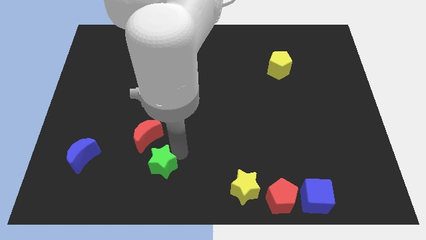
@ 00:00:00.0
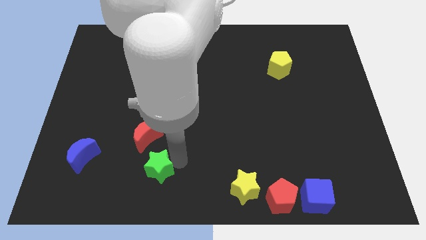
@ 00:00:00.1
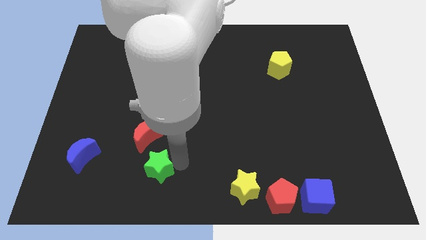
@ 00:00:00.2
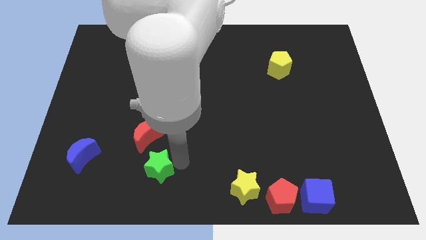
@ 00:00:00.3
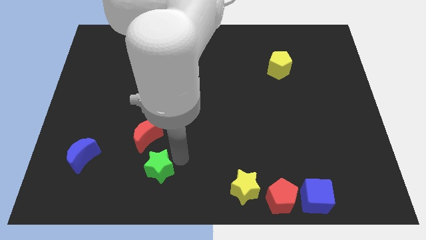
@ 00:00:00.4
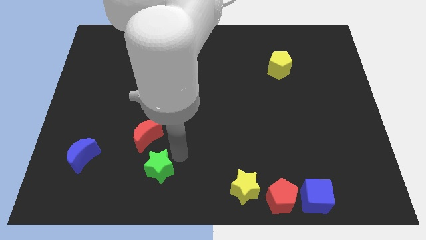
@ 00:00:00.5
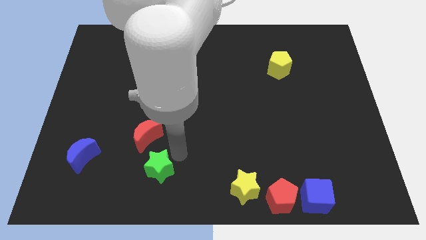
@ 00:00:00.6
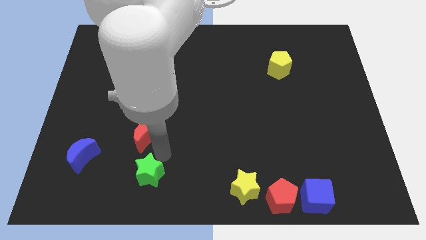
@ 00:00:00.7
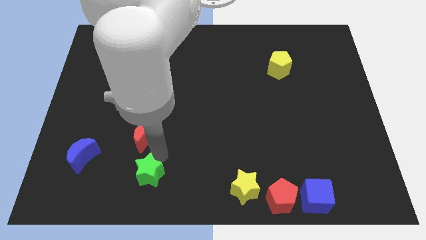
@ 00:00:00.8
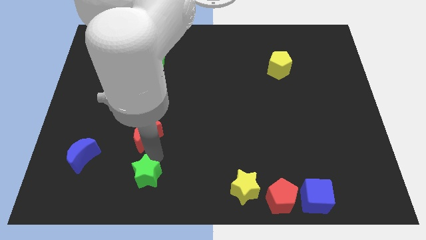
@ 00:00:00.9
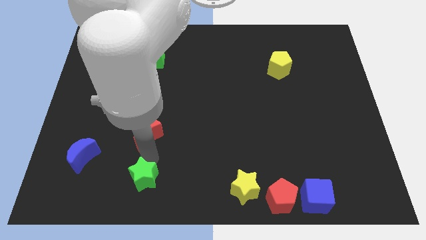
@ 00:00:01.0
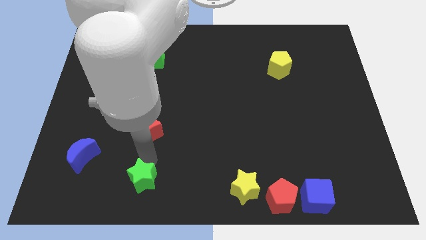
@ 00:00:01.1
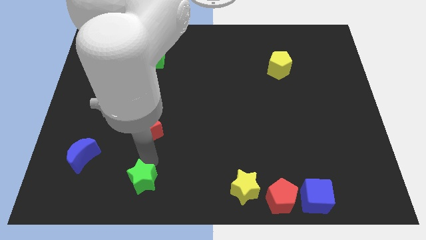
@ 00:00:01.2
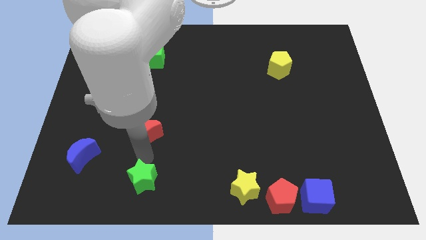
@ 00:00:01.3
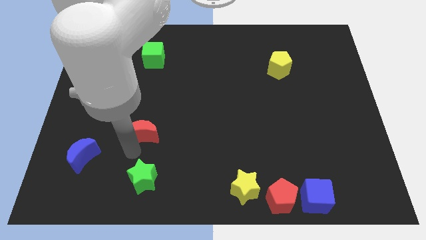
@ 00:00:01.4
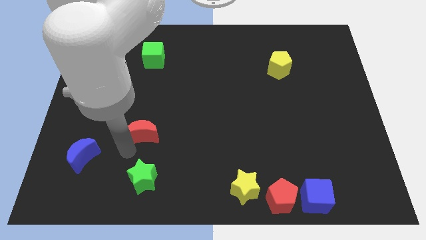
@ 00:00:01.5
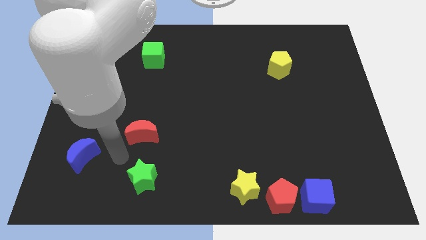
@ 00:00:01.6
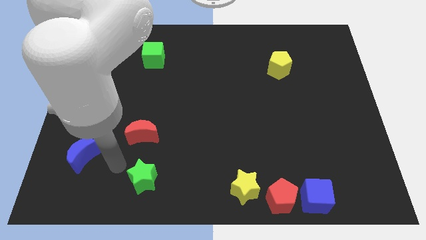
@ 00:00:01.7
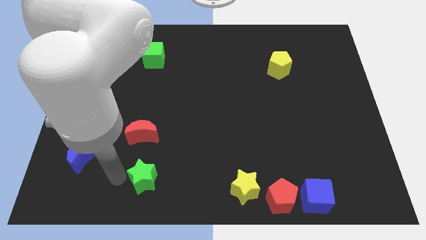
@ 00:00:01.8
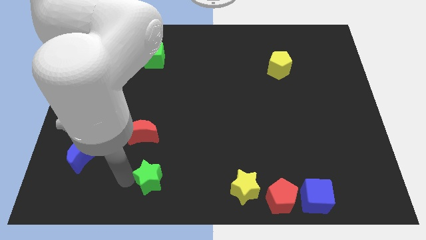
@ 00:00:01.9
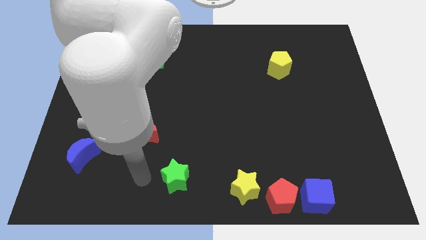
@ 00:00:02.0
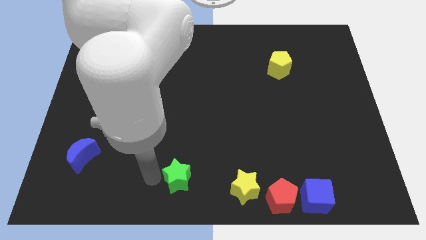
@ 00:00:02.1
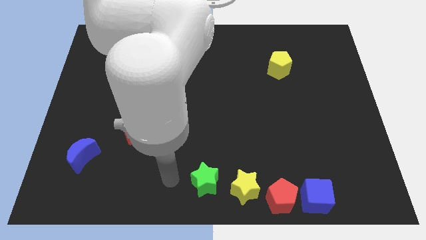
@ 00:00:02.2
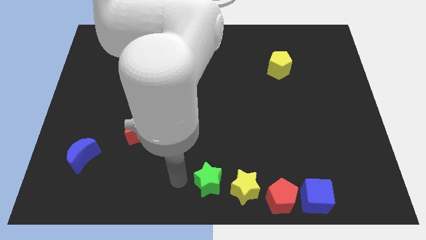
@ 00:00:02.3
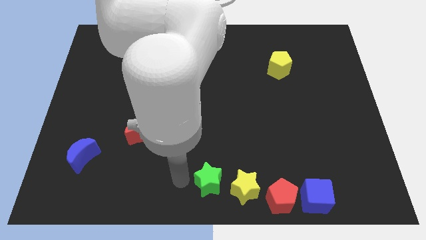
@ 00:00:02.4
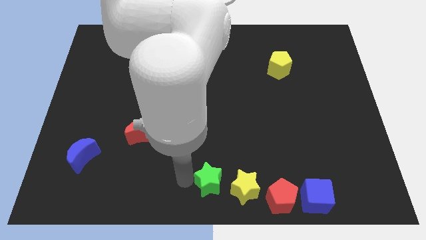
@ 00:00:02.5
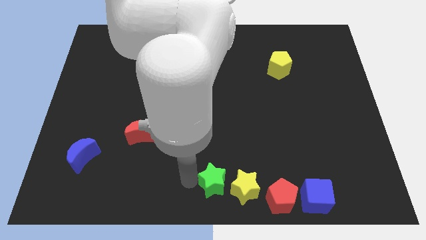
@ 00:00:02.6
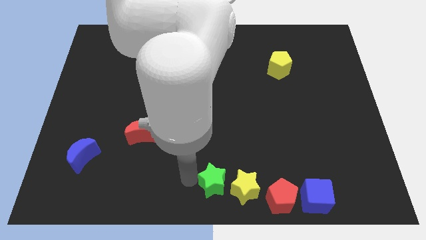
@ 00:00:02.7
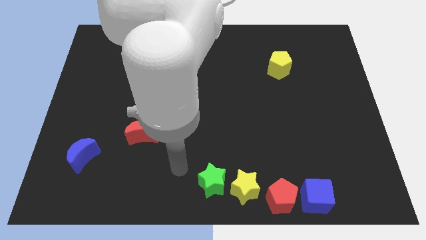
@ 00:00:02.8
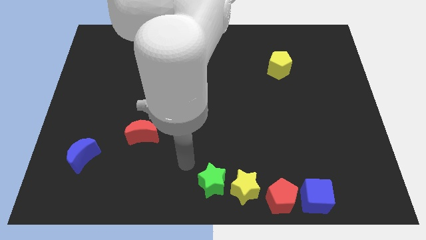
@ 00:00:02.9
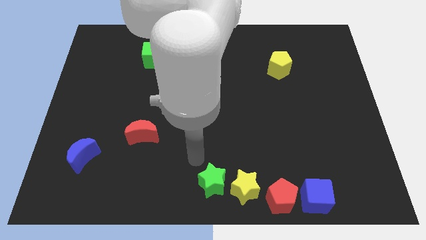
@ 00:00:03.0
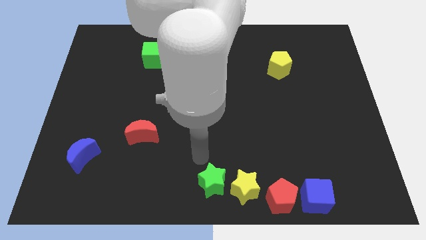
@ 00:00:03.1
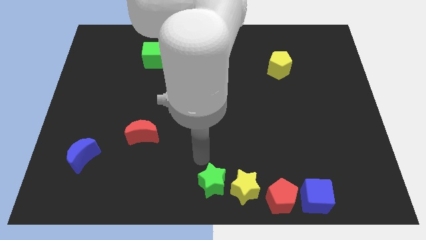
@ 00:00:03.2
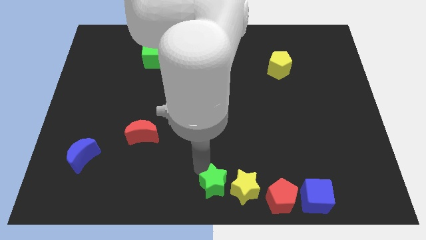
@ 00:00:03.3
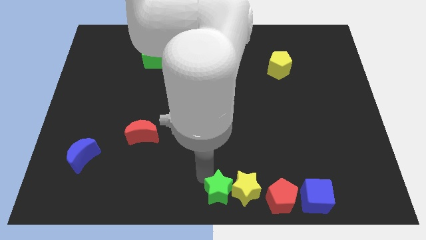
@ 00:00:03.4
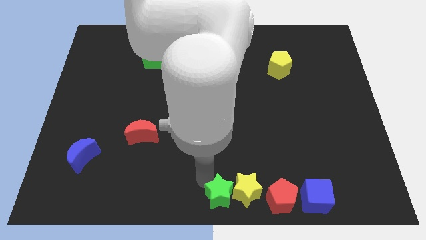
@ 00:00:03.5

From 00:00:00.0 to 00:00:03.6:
push the green star into the yellow star from the left

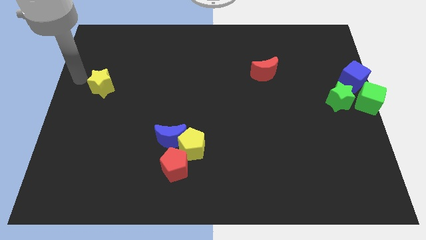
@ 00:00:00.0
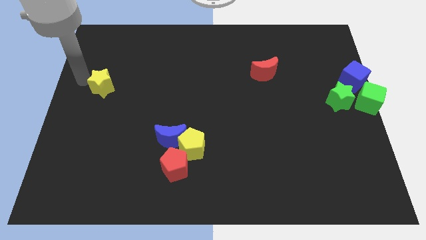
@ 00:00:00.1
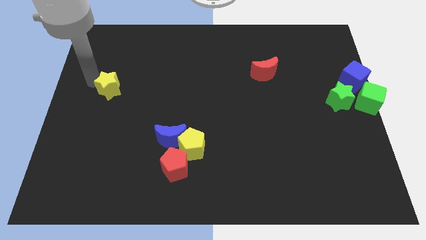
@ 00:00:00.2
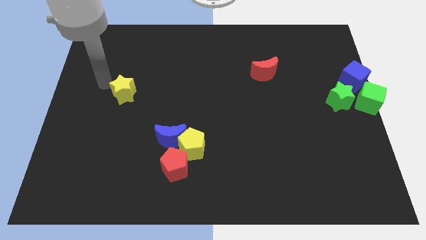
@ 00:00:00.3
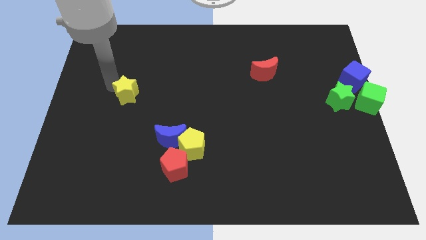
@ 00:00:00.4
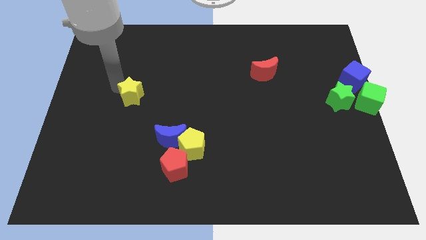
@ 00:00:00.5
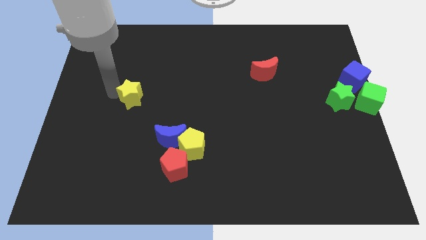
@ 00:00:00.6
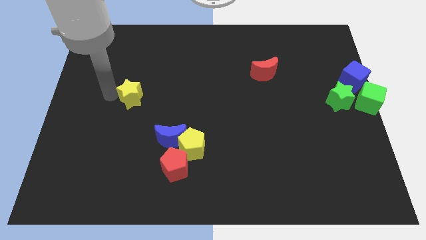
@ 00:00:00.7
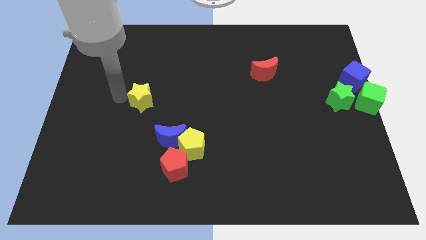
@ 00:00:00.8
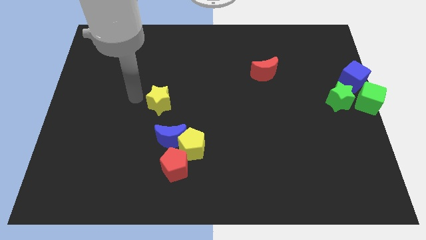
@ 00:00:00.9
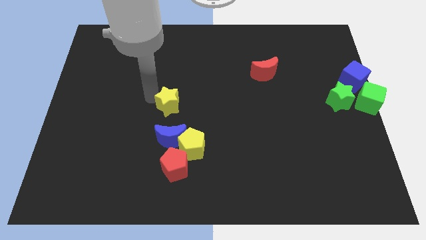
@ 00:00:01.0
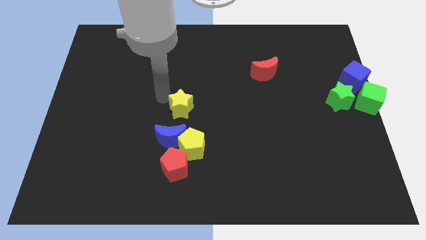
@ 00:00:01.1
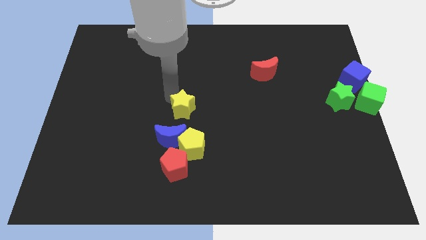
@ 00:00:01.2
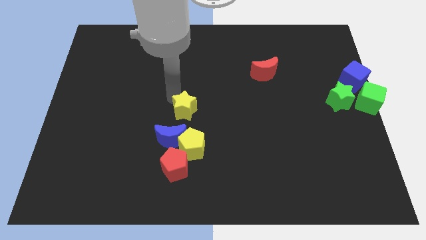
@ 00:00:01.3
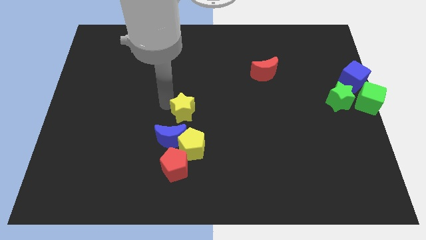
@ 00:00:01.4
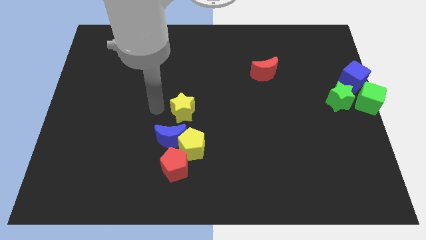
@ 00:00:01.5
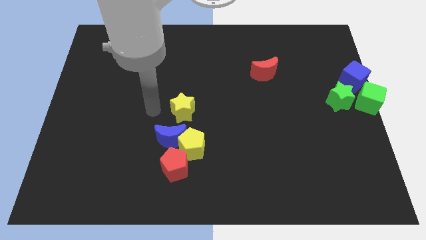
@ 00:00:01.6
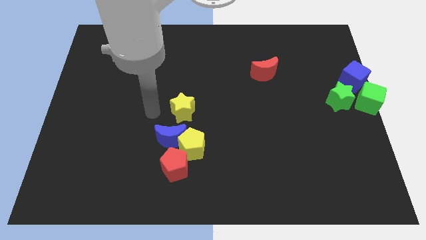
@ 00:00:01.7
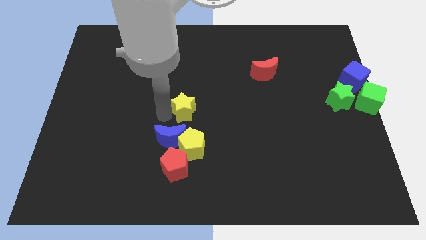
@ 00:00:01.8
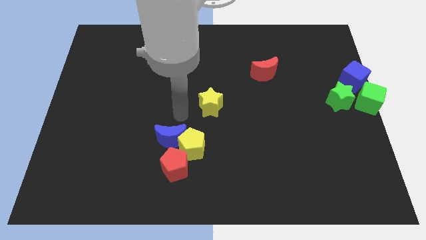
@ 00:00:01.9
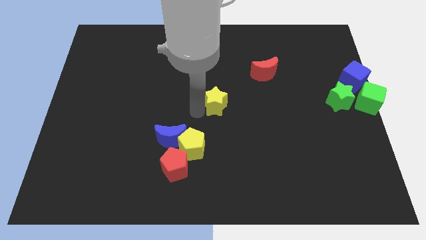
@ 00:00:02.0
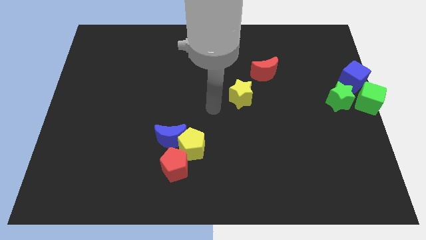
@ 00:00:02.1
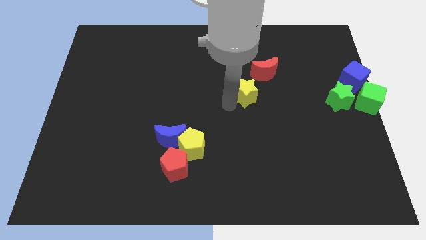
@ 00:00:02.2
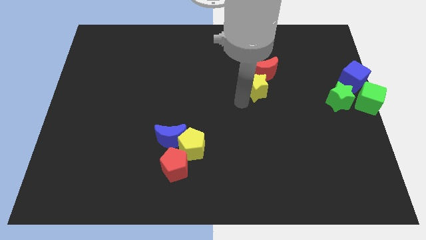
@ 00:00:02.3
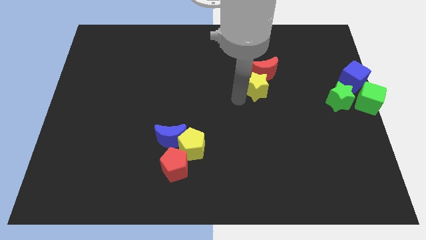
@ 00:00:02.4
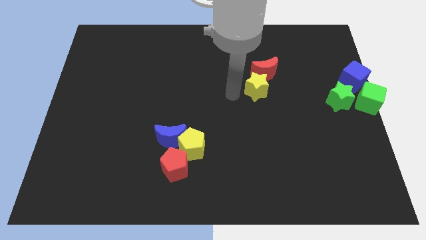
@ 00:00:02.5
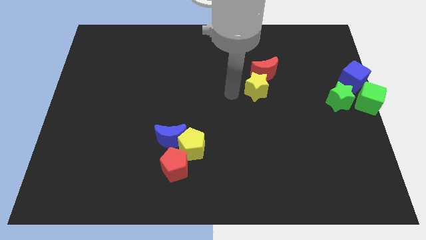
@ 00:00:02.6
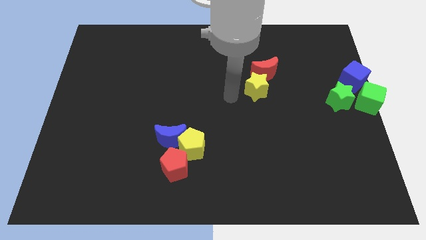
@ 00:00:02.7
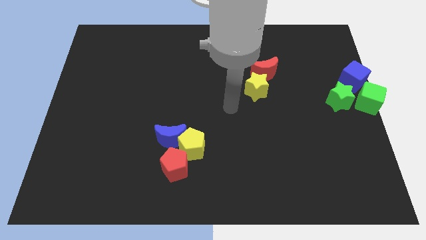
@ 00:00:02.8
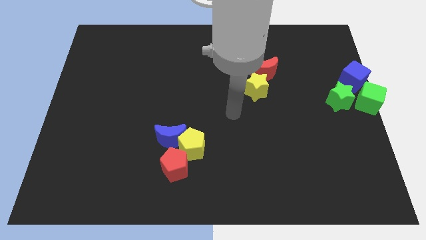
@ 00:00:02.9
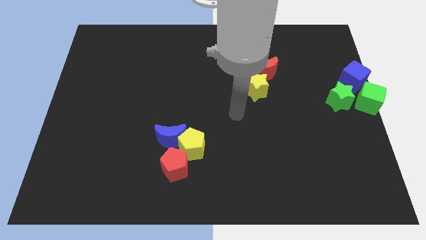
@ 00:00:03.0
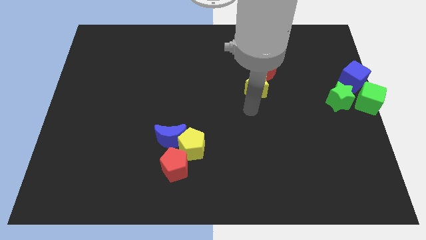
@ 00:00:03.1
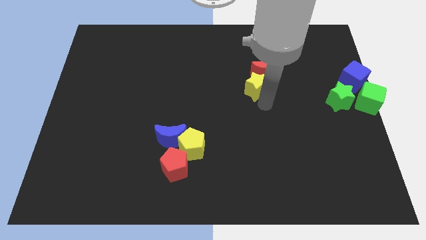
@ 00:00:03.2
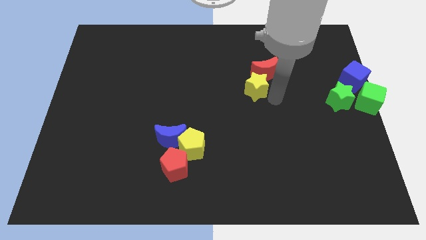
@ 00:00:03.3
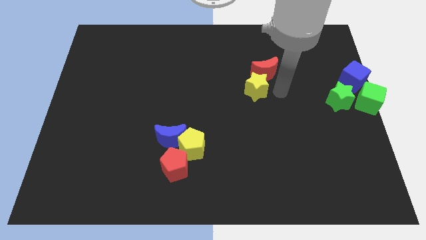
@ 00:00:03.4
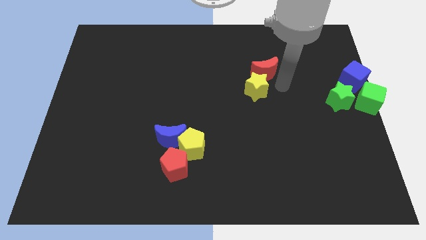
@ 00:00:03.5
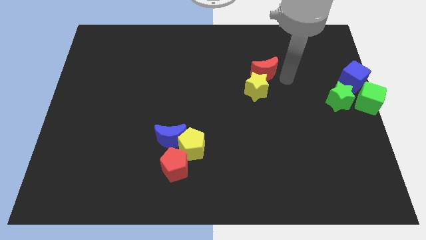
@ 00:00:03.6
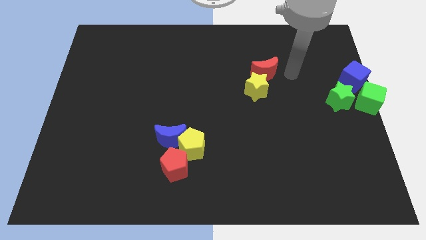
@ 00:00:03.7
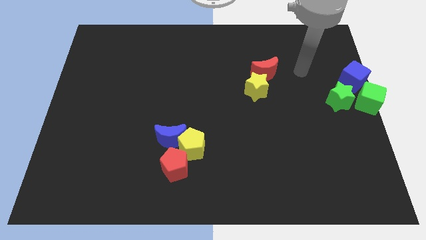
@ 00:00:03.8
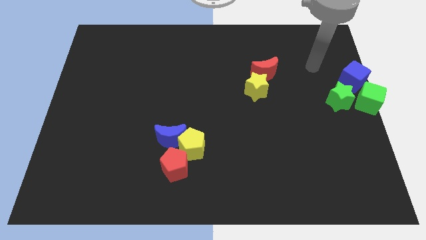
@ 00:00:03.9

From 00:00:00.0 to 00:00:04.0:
place the yellow star below the red moon

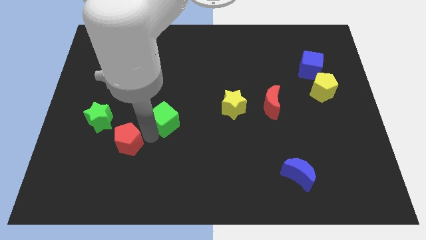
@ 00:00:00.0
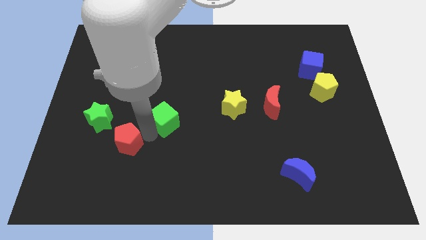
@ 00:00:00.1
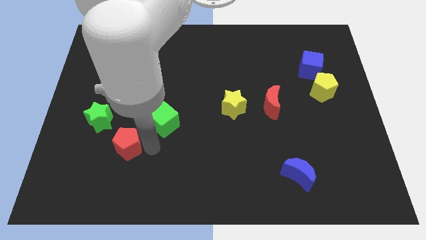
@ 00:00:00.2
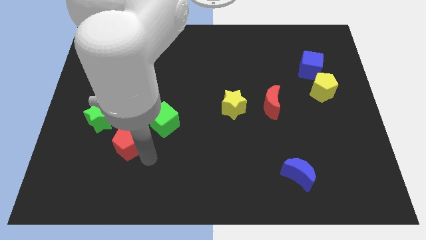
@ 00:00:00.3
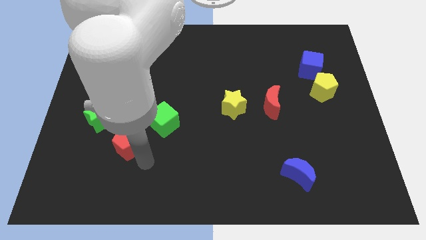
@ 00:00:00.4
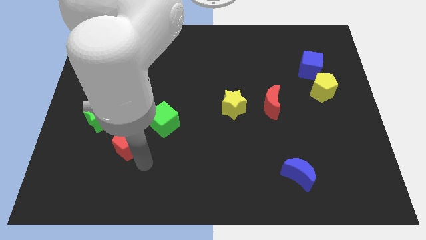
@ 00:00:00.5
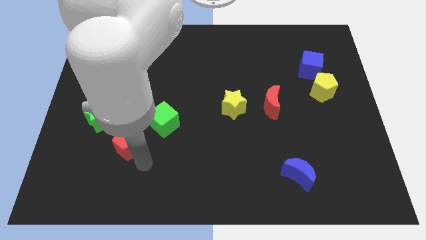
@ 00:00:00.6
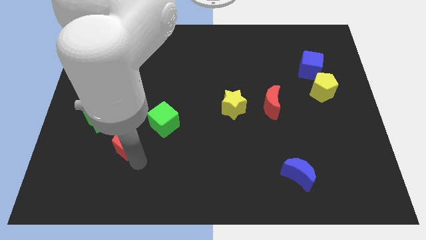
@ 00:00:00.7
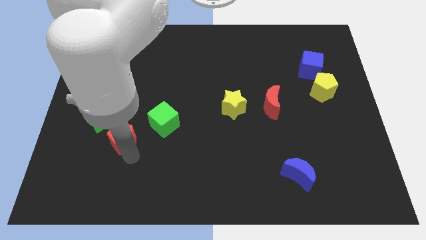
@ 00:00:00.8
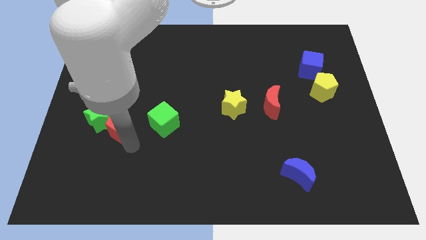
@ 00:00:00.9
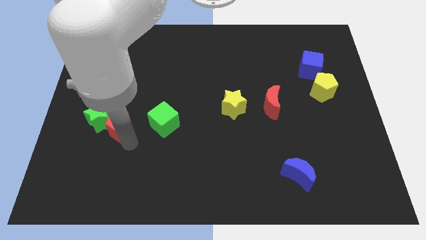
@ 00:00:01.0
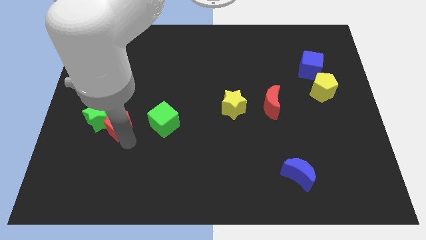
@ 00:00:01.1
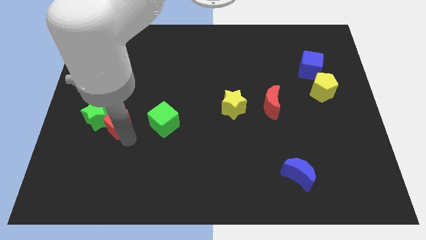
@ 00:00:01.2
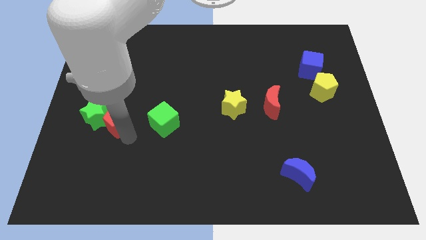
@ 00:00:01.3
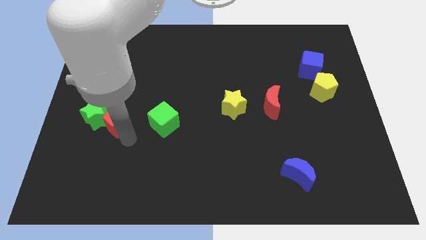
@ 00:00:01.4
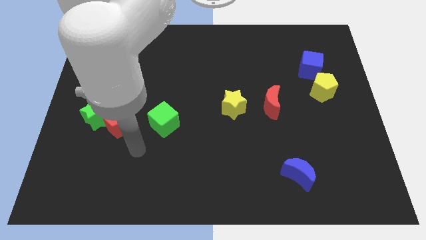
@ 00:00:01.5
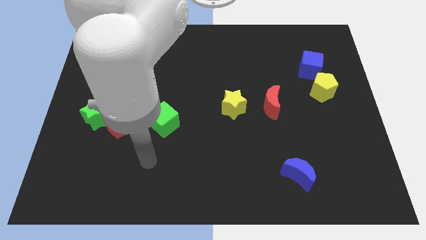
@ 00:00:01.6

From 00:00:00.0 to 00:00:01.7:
push red pentagon into the green star
